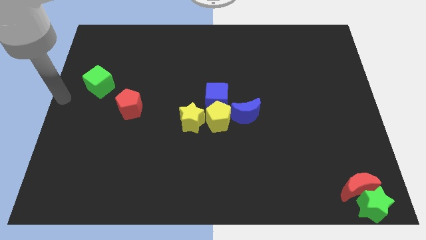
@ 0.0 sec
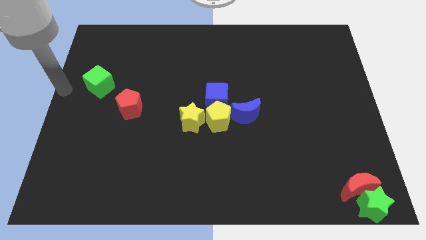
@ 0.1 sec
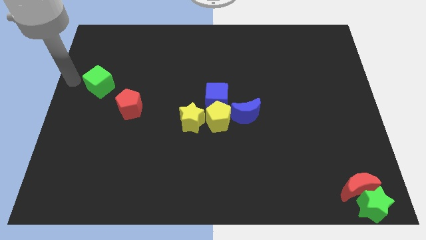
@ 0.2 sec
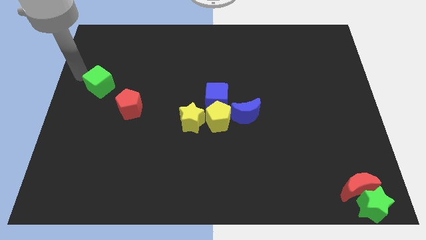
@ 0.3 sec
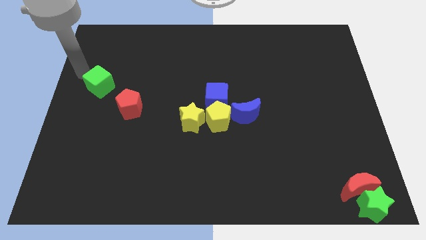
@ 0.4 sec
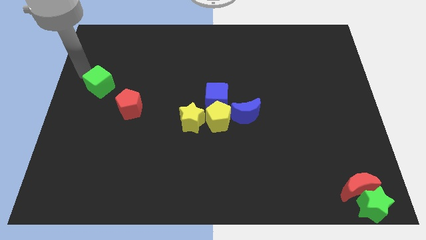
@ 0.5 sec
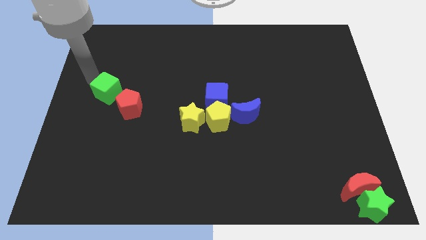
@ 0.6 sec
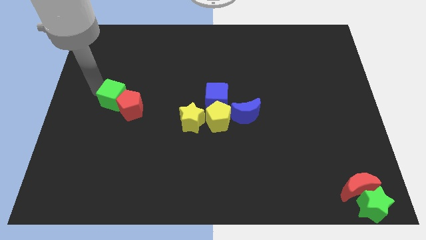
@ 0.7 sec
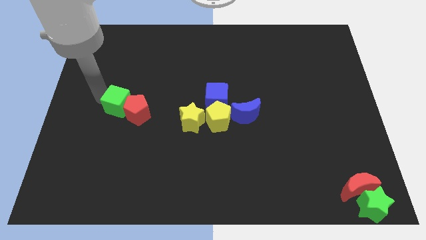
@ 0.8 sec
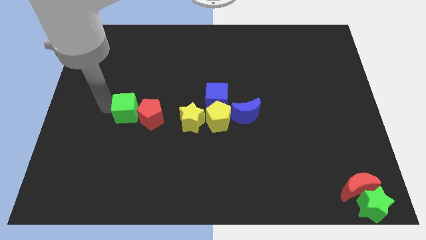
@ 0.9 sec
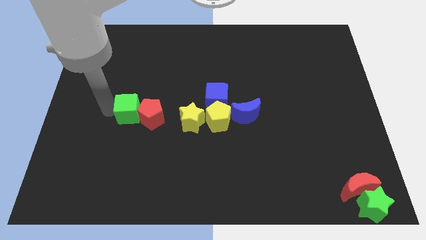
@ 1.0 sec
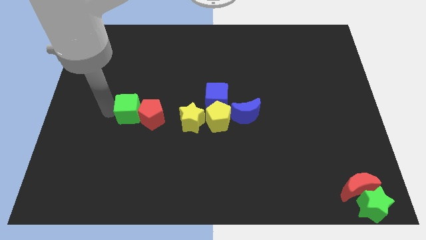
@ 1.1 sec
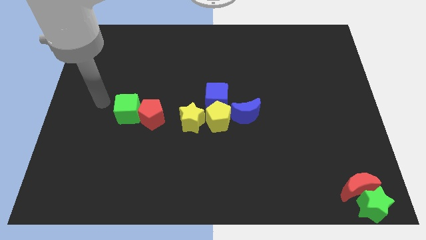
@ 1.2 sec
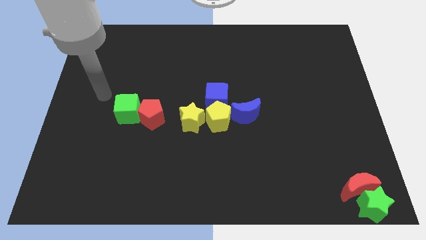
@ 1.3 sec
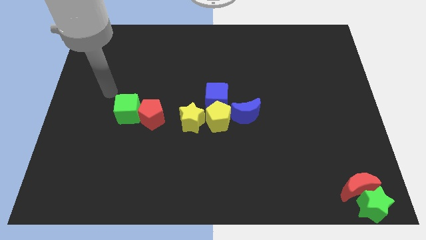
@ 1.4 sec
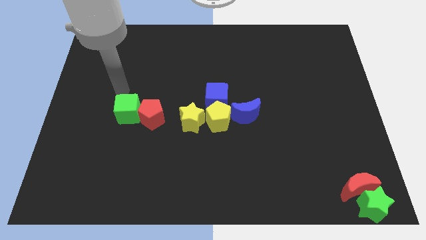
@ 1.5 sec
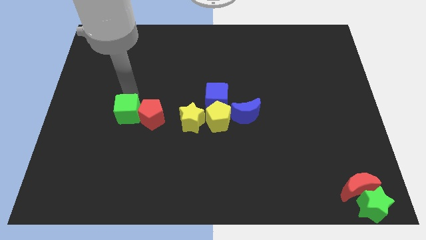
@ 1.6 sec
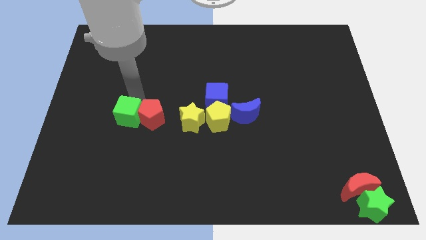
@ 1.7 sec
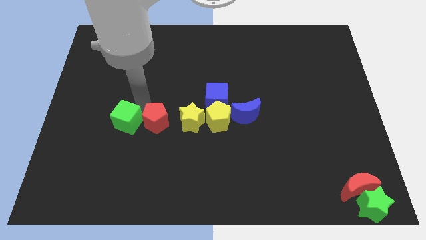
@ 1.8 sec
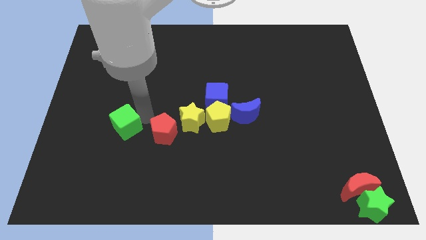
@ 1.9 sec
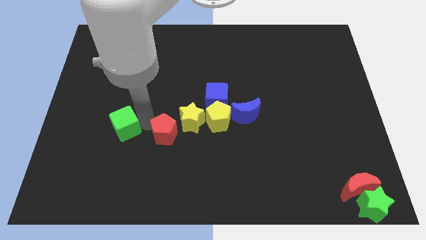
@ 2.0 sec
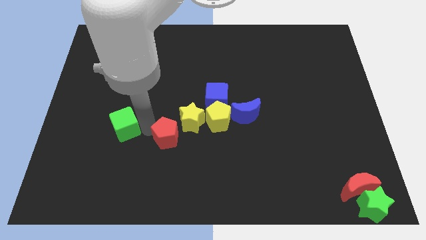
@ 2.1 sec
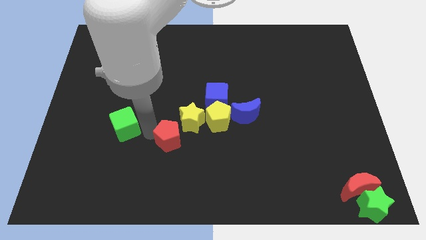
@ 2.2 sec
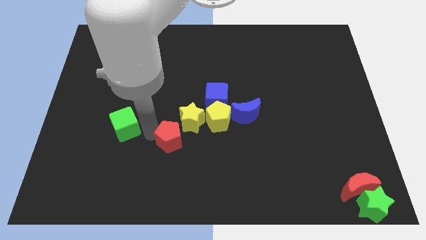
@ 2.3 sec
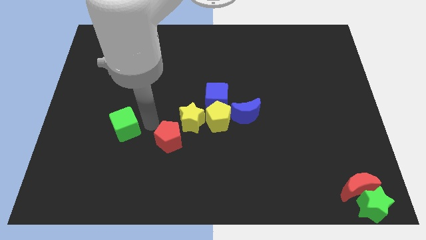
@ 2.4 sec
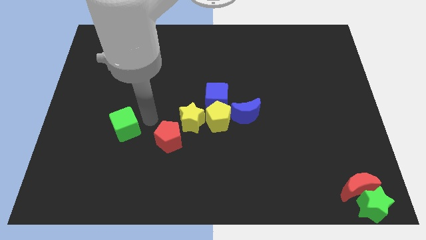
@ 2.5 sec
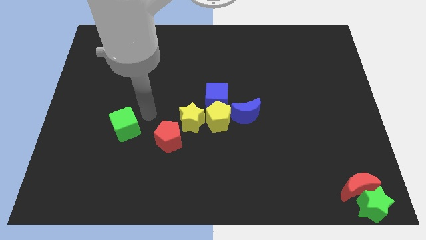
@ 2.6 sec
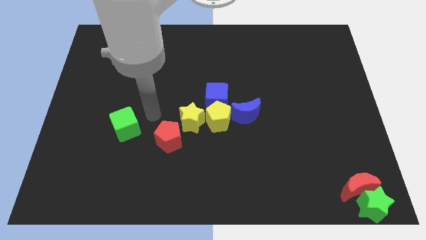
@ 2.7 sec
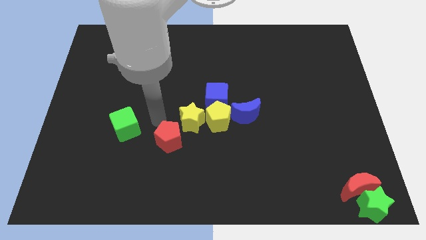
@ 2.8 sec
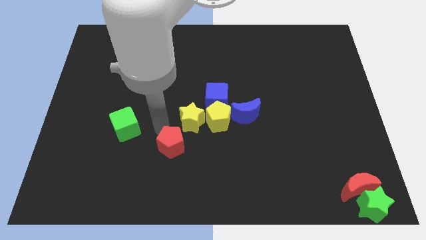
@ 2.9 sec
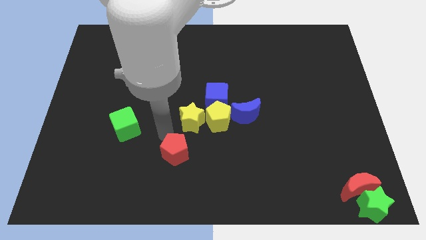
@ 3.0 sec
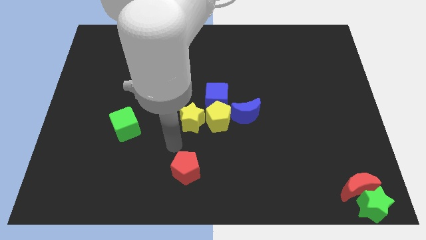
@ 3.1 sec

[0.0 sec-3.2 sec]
separate the red pentagon from green cube

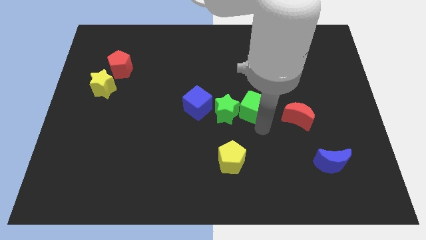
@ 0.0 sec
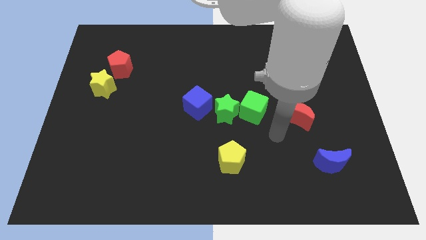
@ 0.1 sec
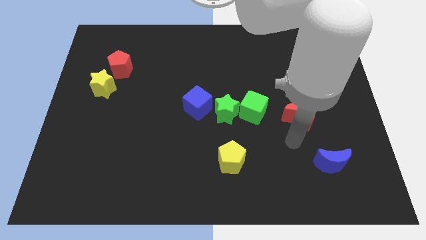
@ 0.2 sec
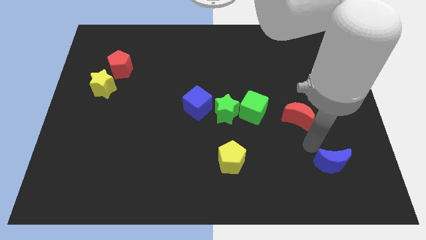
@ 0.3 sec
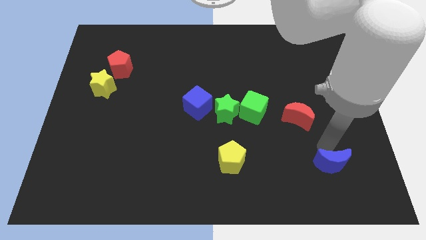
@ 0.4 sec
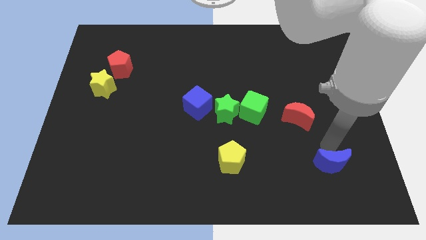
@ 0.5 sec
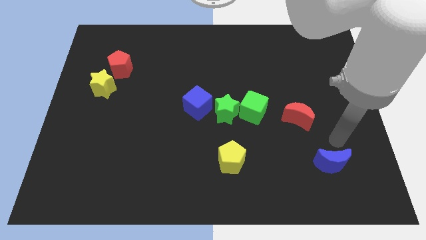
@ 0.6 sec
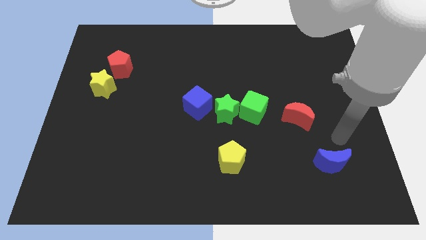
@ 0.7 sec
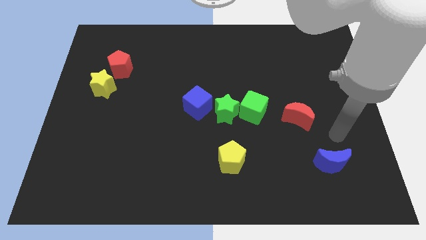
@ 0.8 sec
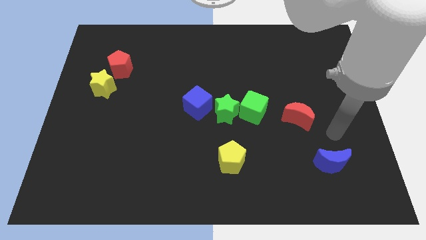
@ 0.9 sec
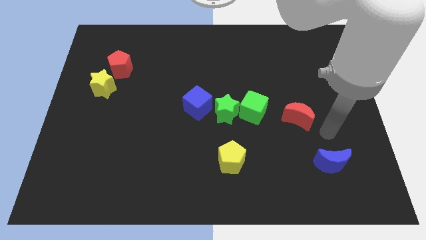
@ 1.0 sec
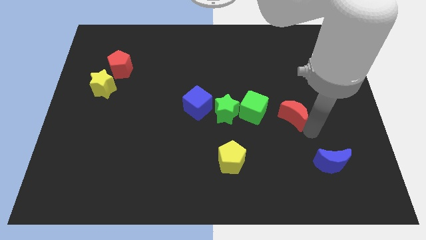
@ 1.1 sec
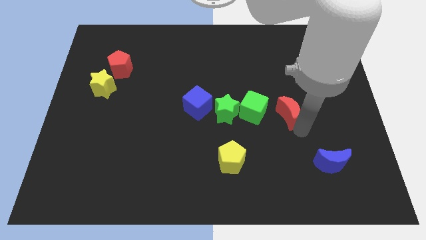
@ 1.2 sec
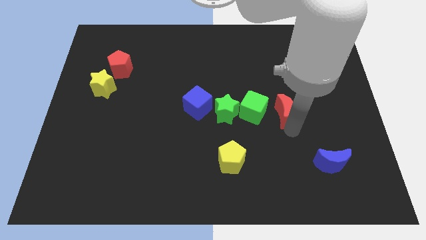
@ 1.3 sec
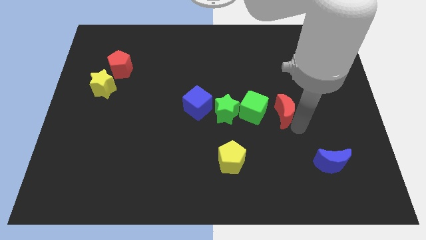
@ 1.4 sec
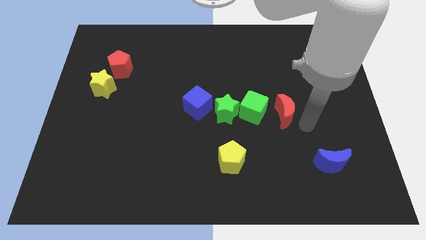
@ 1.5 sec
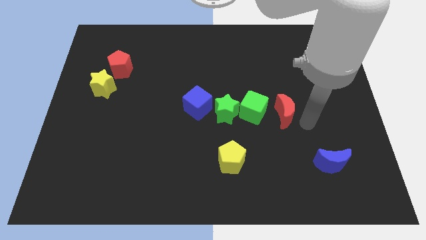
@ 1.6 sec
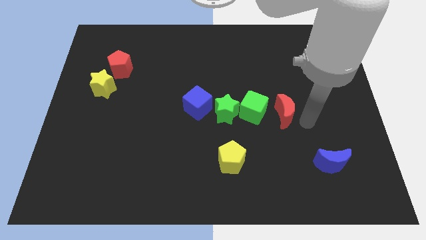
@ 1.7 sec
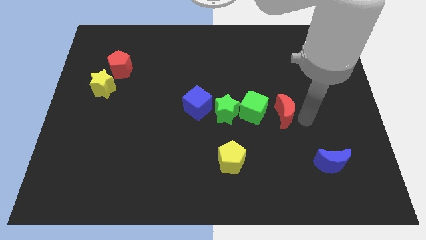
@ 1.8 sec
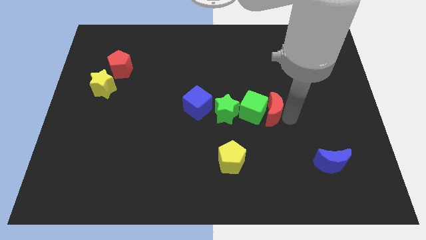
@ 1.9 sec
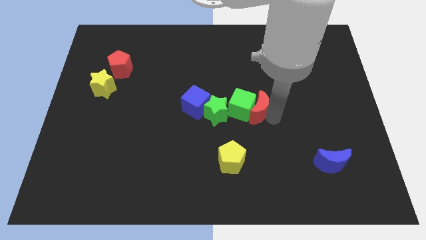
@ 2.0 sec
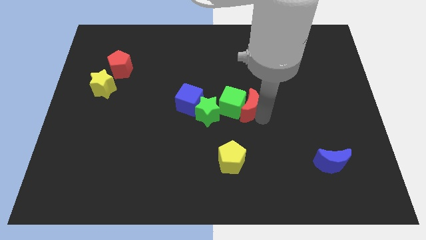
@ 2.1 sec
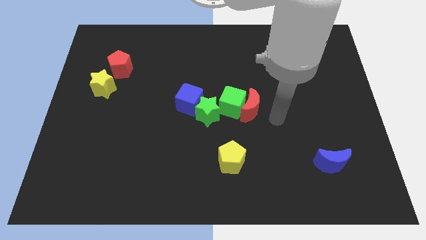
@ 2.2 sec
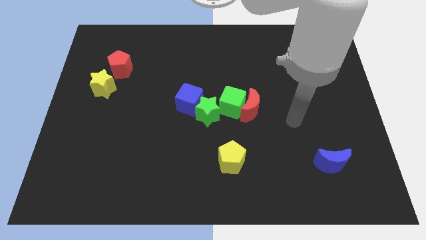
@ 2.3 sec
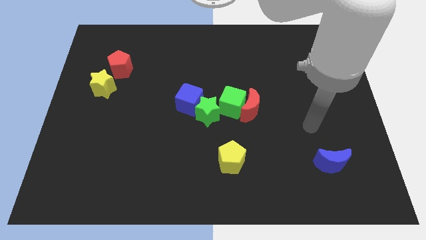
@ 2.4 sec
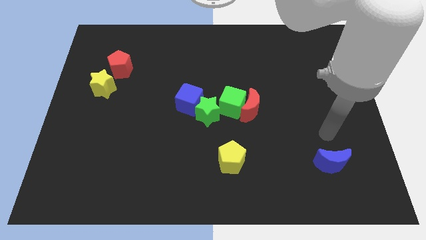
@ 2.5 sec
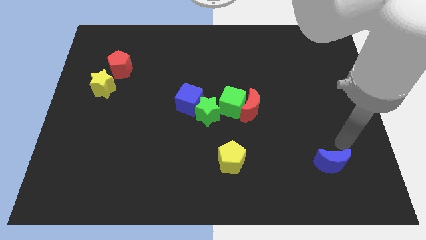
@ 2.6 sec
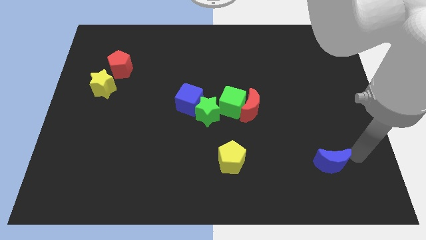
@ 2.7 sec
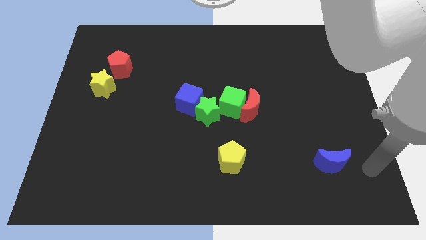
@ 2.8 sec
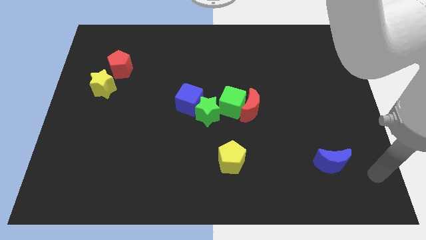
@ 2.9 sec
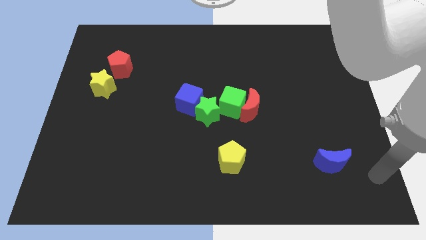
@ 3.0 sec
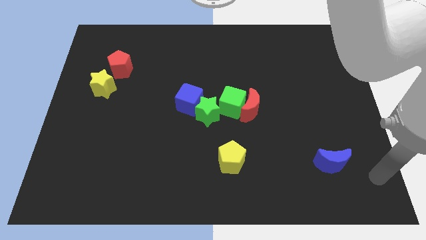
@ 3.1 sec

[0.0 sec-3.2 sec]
move the red moon into the green cube

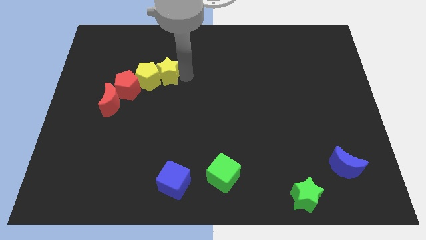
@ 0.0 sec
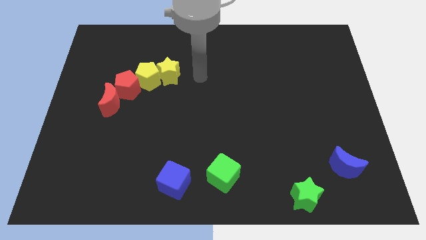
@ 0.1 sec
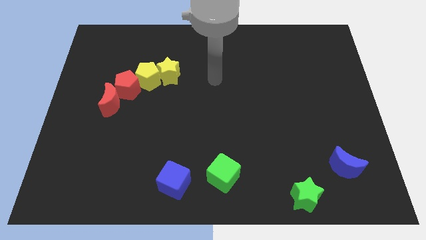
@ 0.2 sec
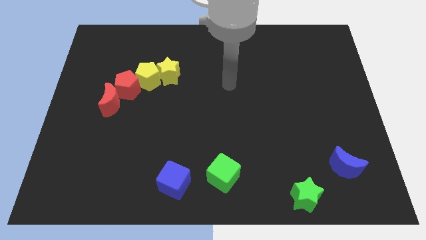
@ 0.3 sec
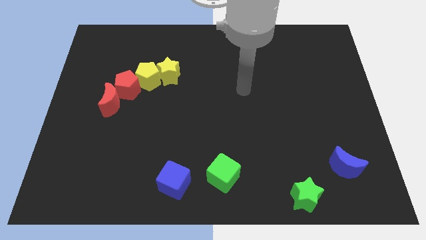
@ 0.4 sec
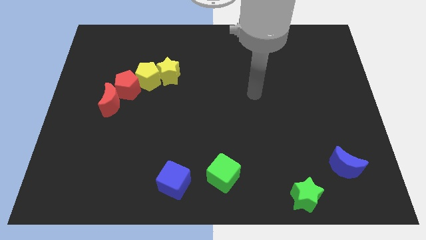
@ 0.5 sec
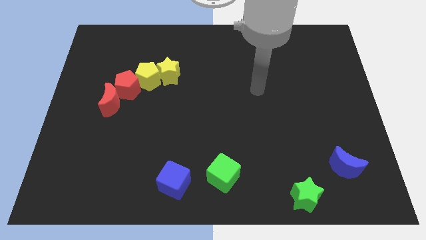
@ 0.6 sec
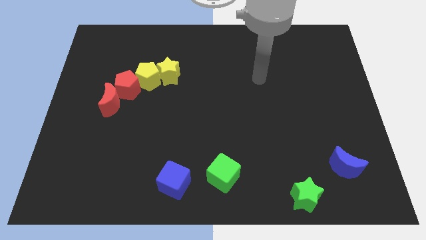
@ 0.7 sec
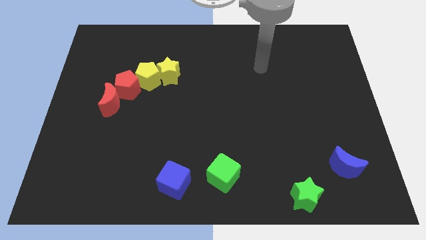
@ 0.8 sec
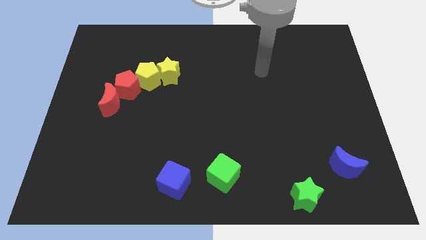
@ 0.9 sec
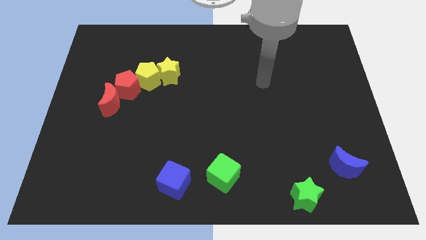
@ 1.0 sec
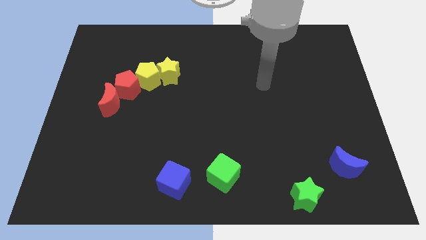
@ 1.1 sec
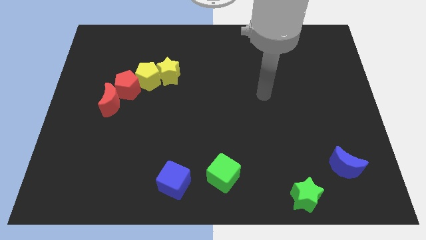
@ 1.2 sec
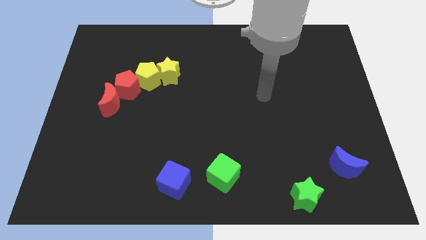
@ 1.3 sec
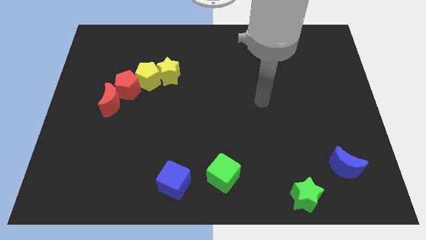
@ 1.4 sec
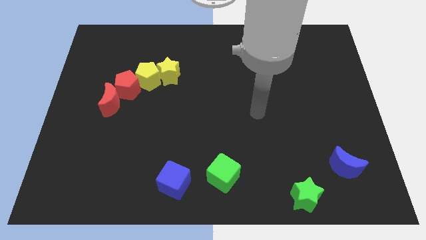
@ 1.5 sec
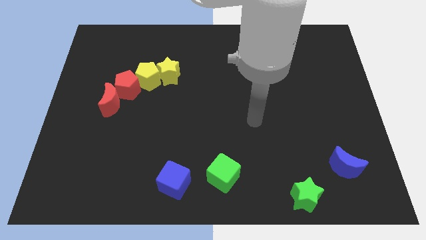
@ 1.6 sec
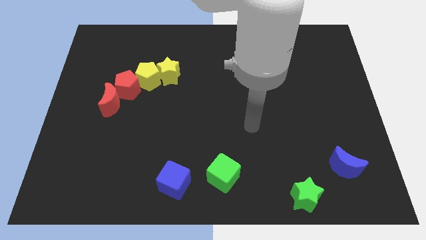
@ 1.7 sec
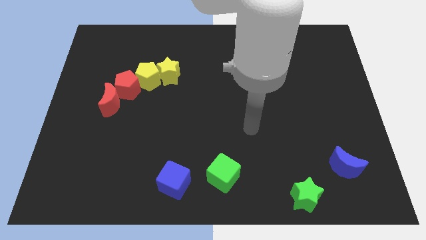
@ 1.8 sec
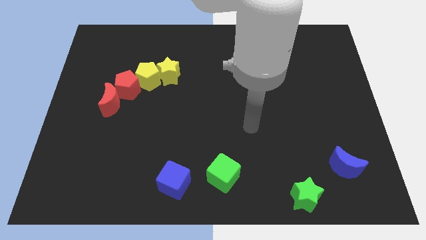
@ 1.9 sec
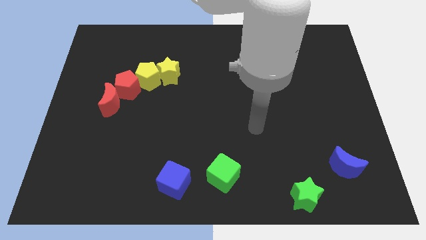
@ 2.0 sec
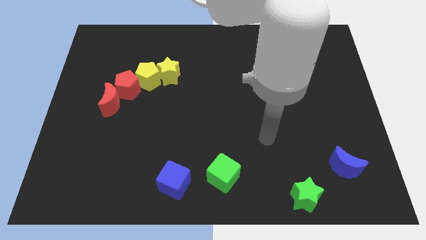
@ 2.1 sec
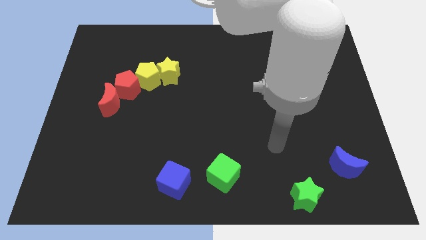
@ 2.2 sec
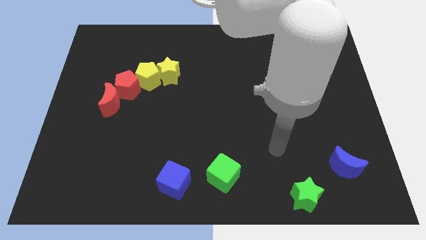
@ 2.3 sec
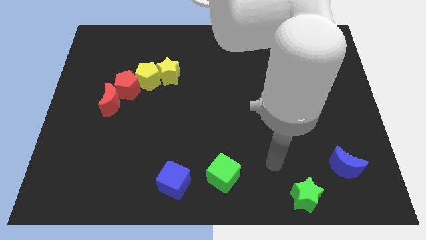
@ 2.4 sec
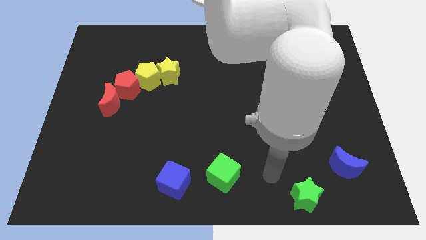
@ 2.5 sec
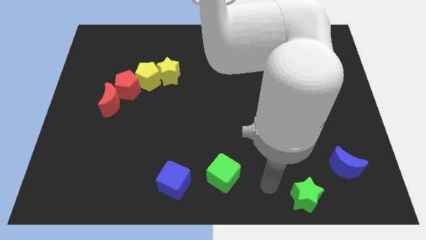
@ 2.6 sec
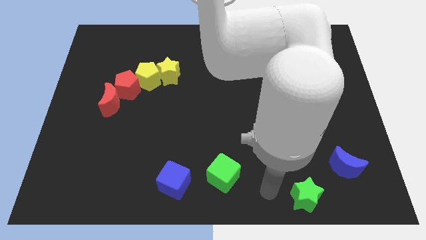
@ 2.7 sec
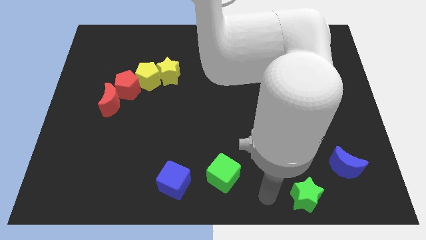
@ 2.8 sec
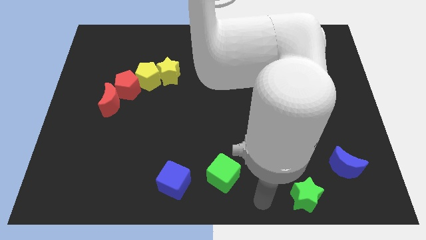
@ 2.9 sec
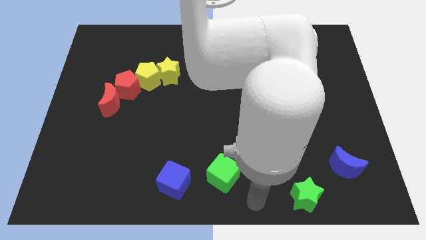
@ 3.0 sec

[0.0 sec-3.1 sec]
go and push your arm to the left of the green star
